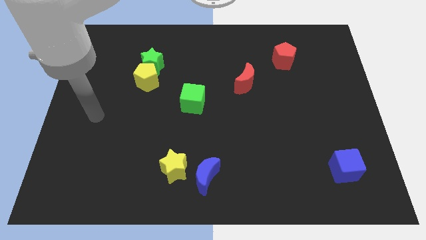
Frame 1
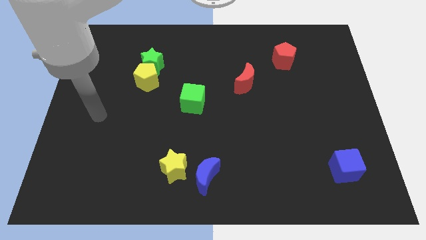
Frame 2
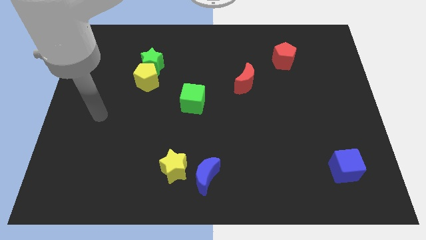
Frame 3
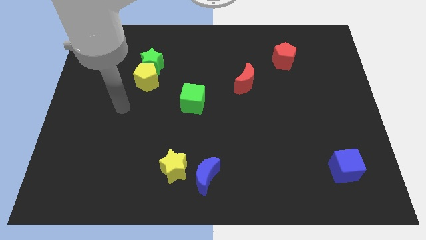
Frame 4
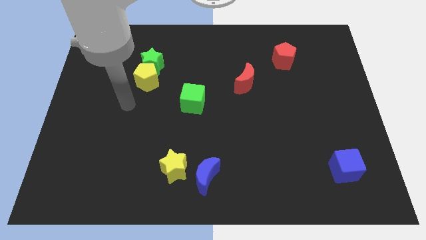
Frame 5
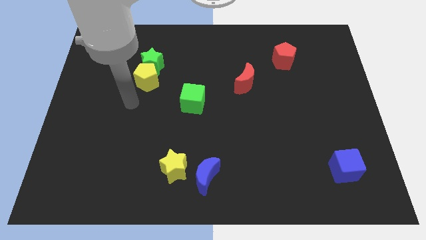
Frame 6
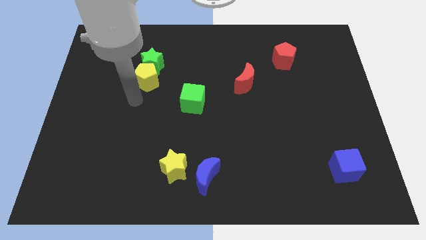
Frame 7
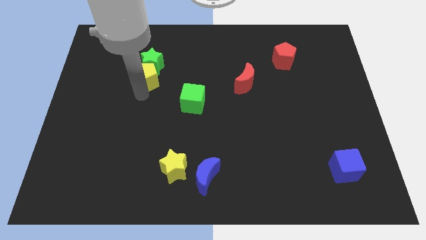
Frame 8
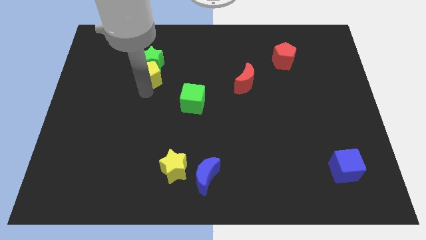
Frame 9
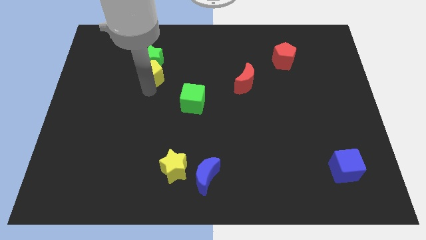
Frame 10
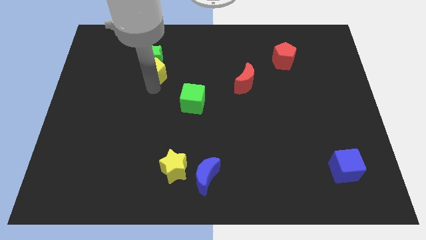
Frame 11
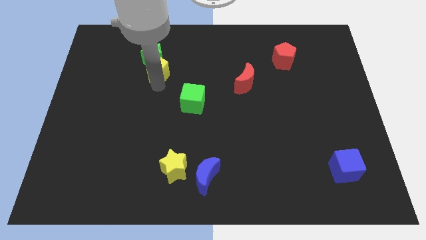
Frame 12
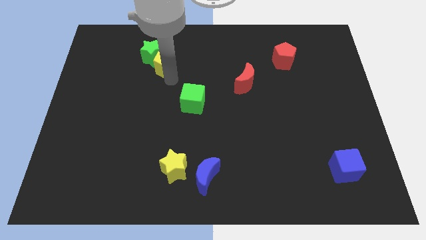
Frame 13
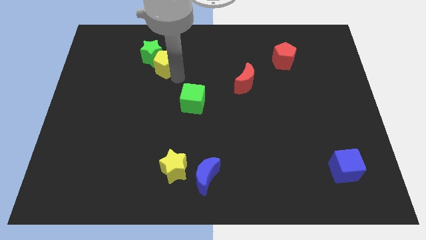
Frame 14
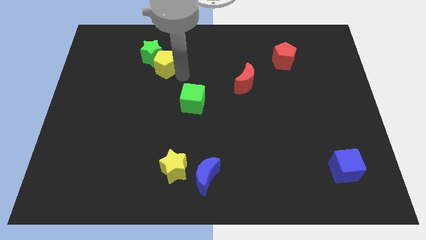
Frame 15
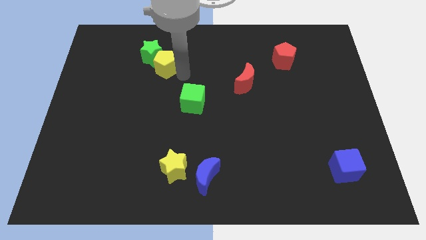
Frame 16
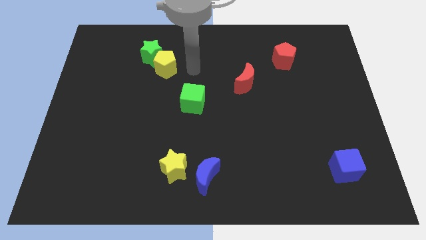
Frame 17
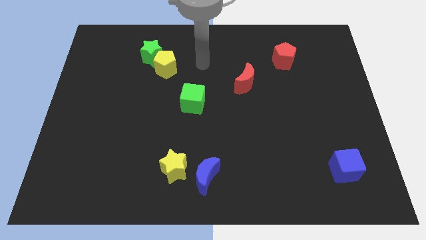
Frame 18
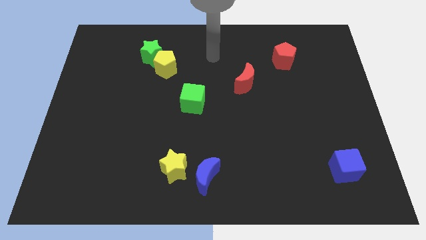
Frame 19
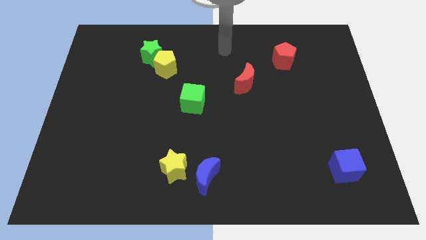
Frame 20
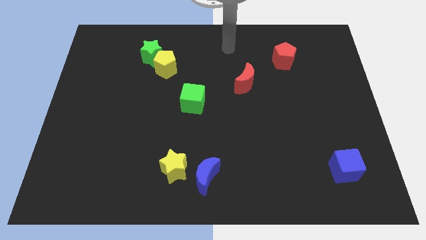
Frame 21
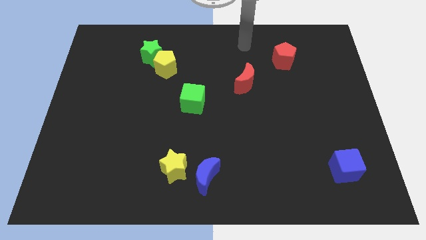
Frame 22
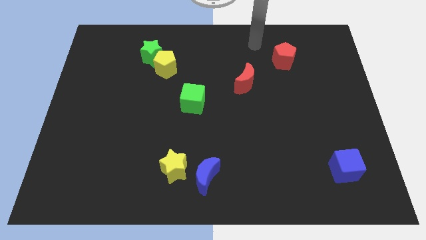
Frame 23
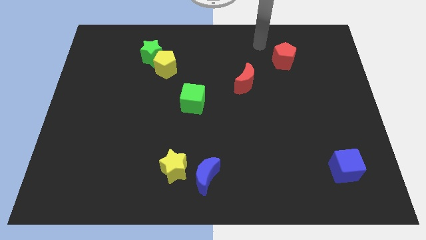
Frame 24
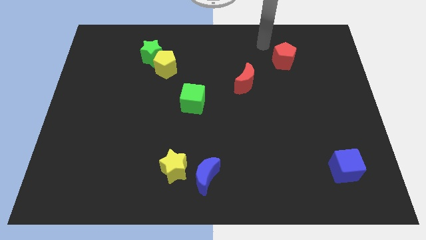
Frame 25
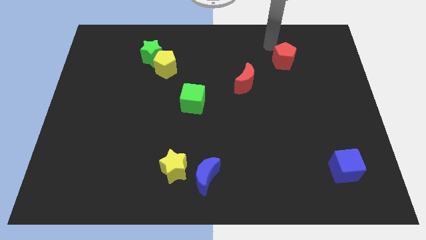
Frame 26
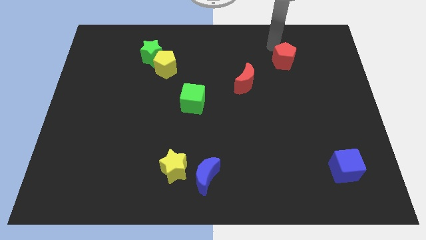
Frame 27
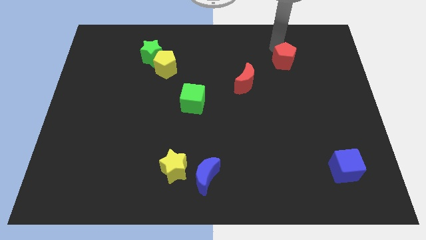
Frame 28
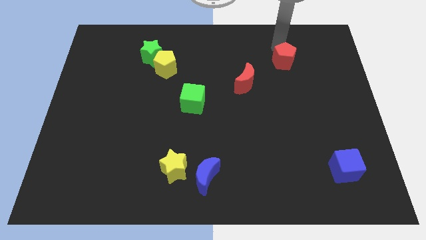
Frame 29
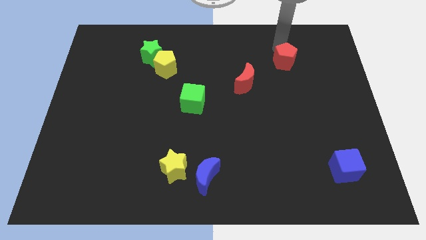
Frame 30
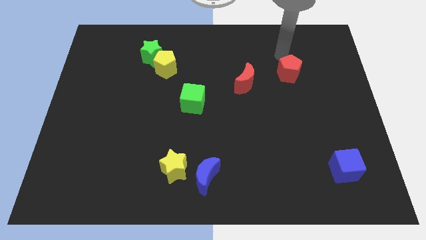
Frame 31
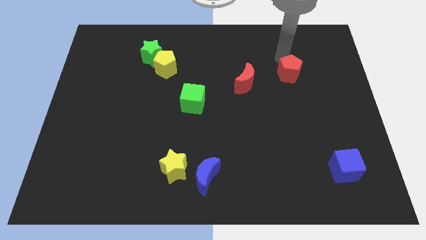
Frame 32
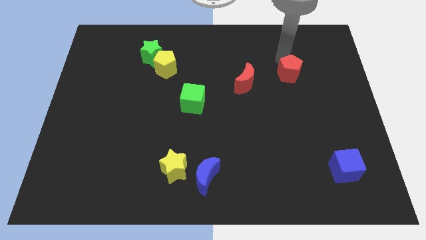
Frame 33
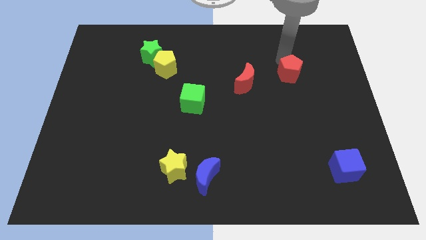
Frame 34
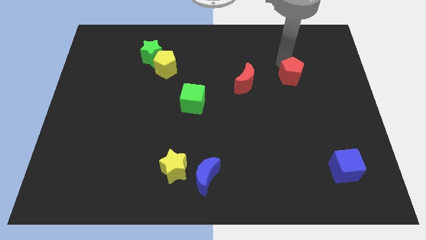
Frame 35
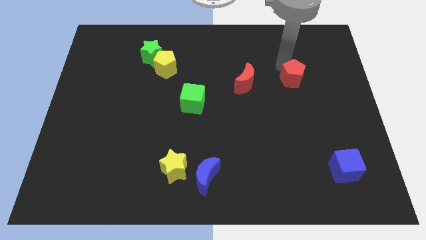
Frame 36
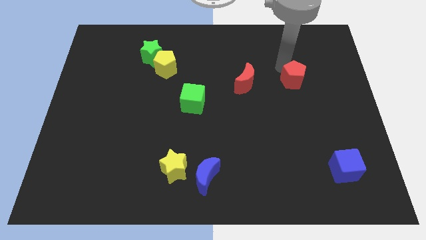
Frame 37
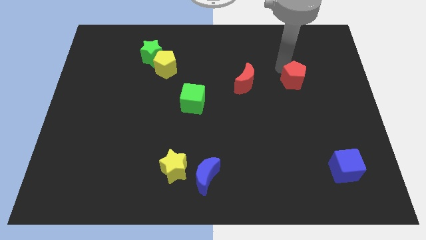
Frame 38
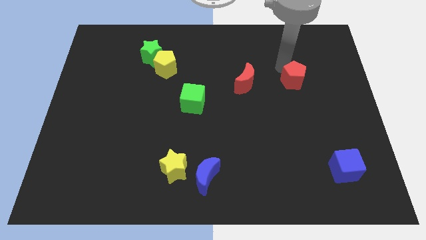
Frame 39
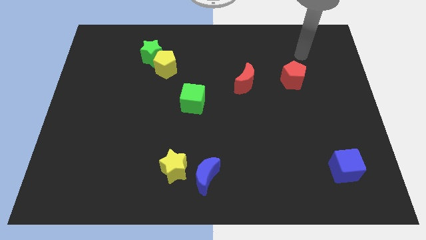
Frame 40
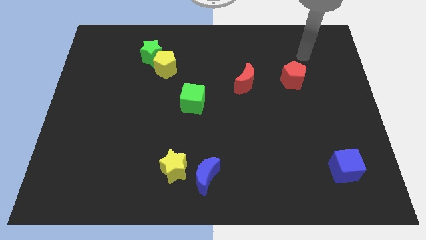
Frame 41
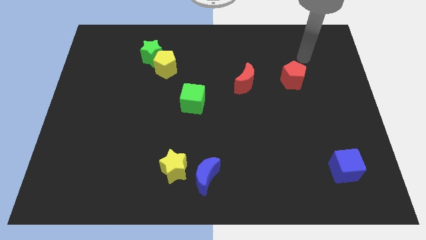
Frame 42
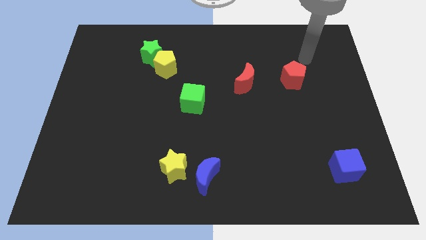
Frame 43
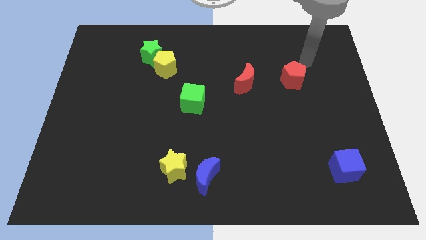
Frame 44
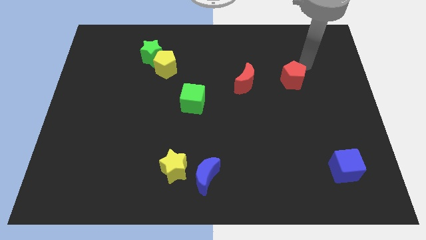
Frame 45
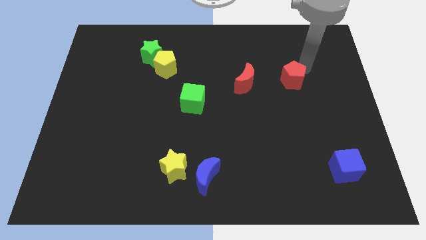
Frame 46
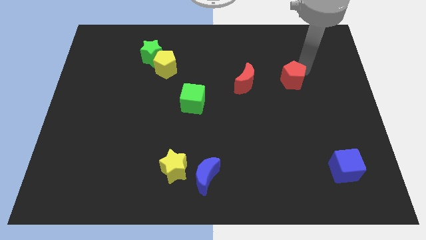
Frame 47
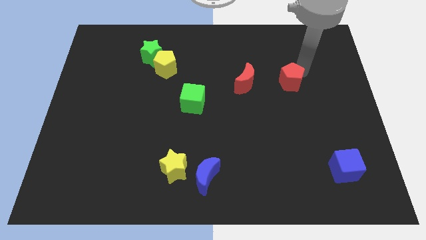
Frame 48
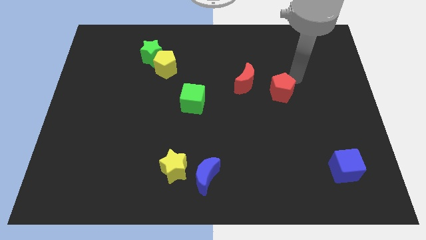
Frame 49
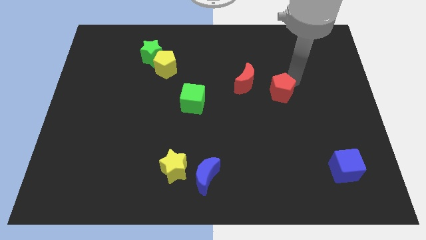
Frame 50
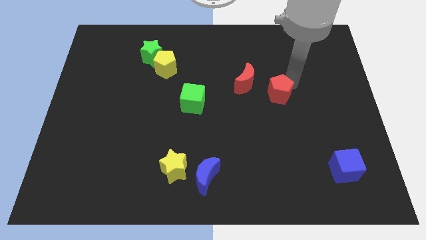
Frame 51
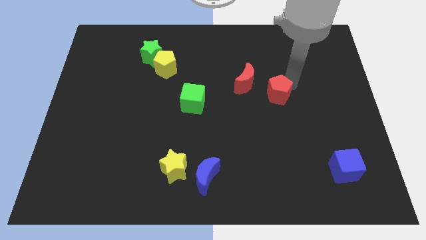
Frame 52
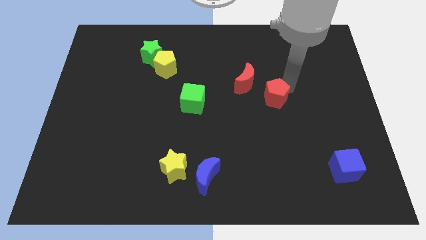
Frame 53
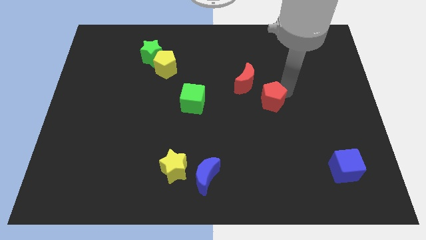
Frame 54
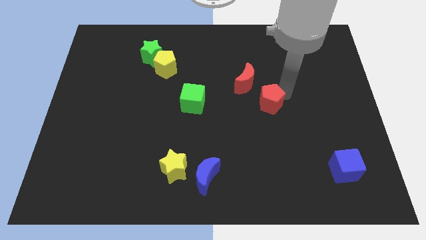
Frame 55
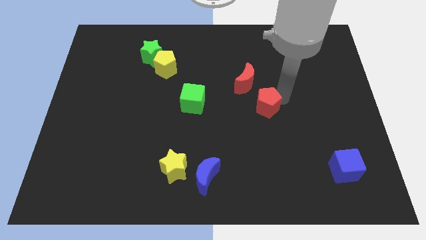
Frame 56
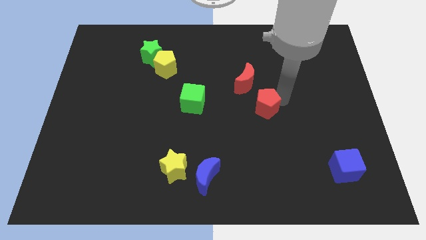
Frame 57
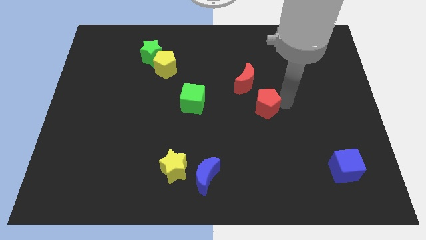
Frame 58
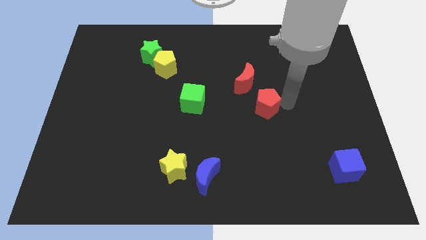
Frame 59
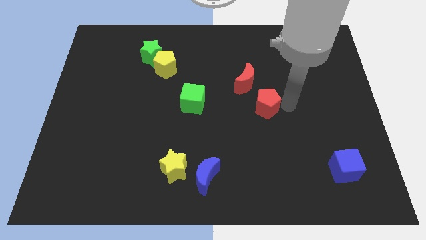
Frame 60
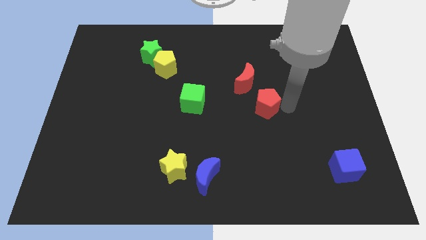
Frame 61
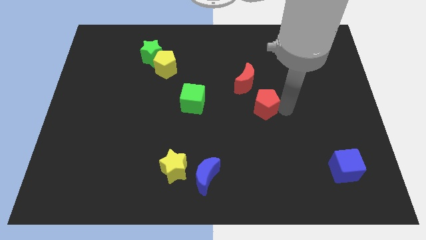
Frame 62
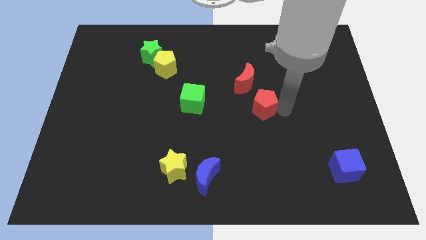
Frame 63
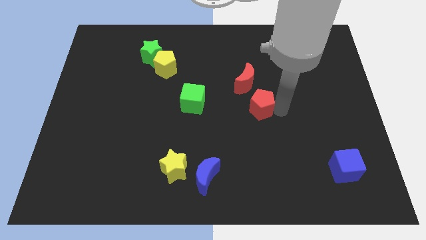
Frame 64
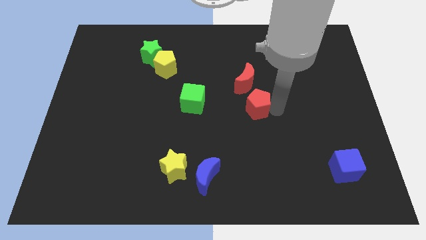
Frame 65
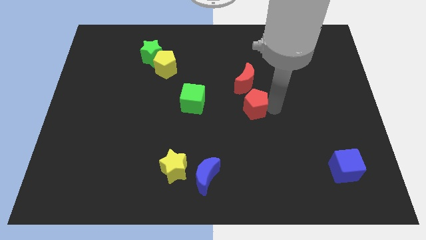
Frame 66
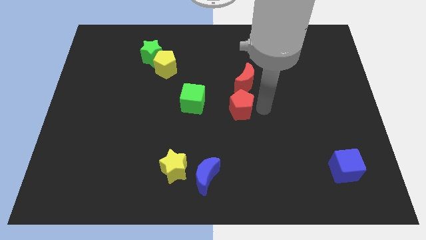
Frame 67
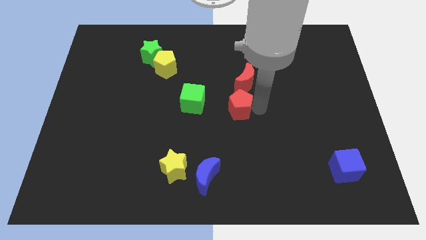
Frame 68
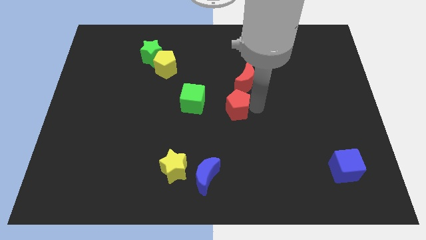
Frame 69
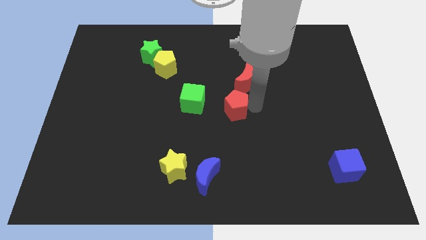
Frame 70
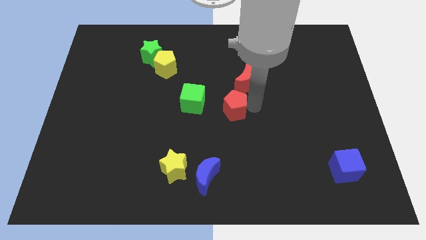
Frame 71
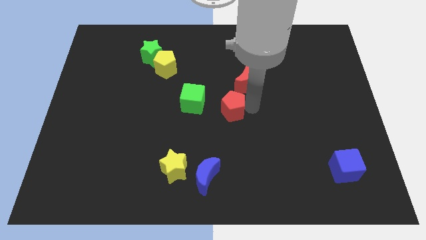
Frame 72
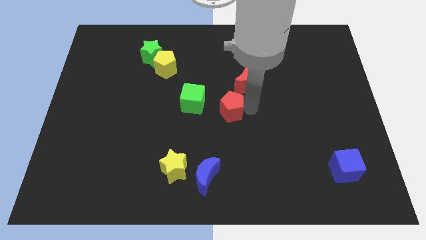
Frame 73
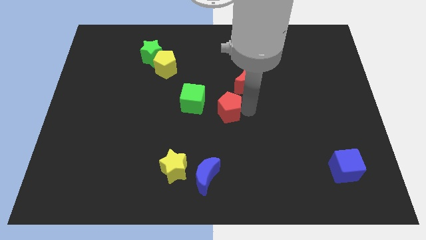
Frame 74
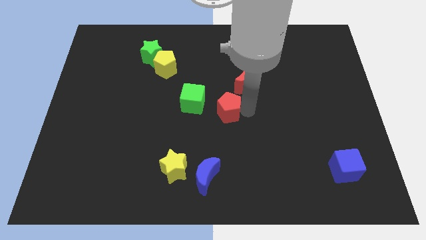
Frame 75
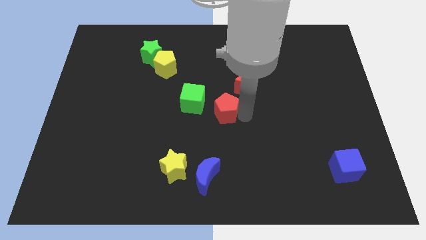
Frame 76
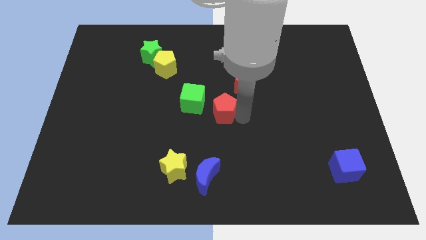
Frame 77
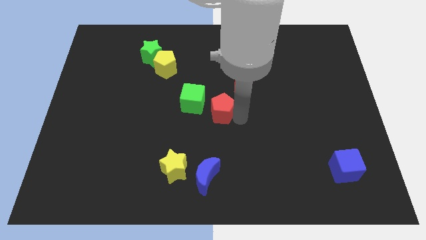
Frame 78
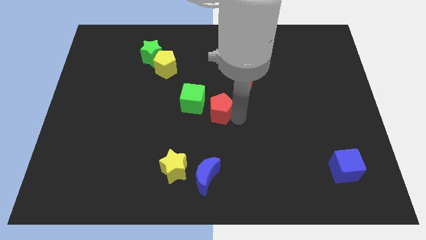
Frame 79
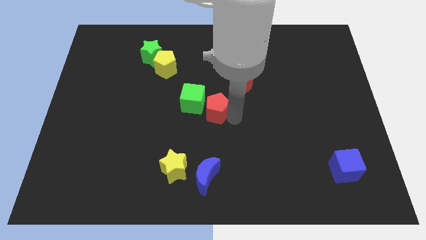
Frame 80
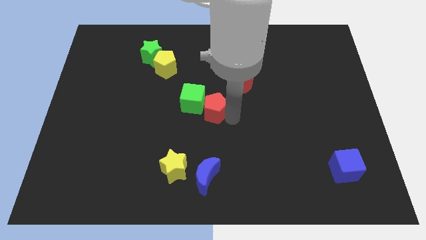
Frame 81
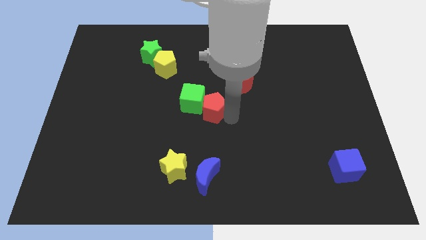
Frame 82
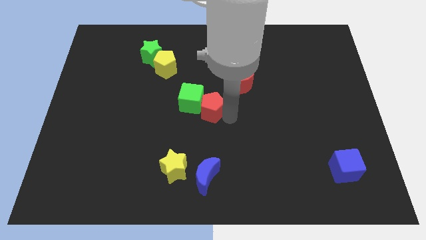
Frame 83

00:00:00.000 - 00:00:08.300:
put the red pentagon close to the green cube

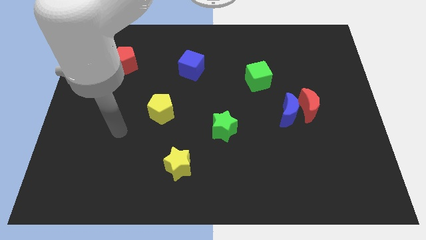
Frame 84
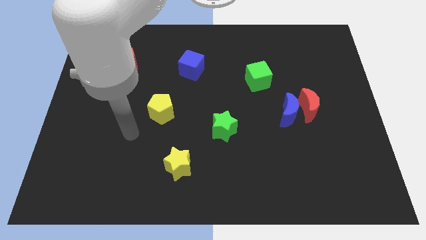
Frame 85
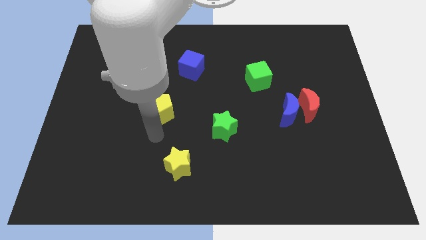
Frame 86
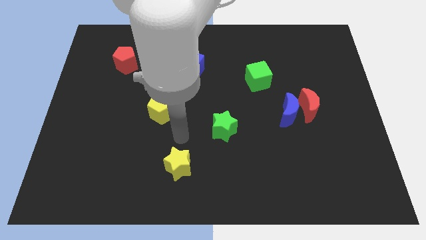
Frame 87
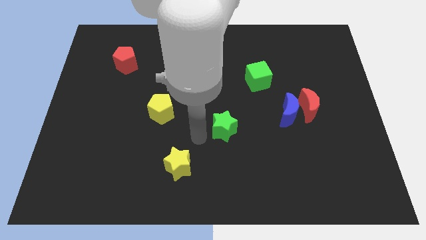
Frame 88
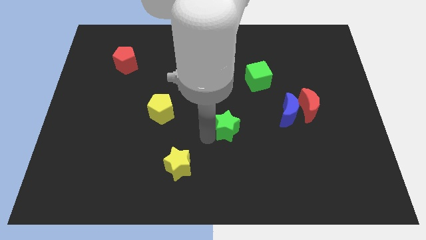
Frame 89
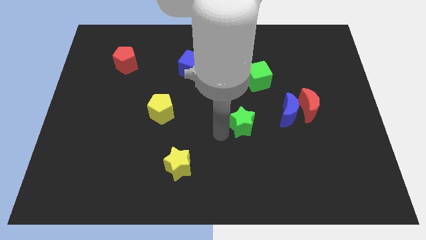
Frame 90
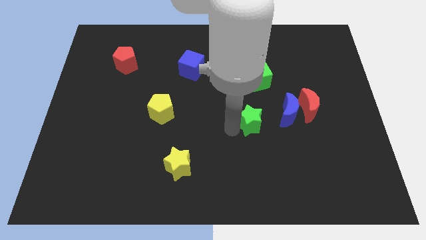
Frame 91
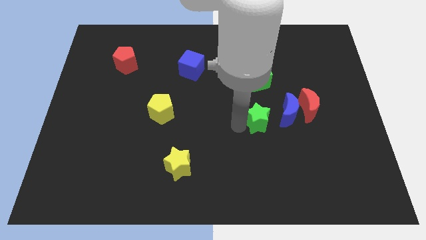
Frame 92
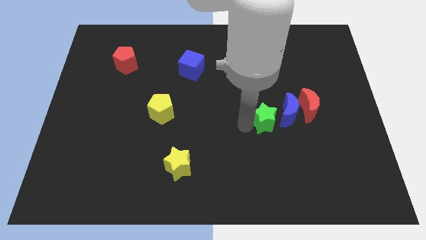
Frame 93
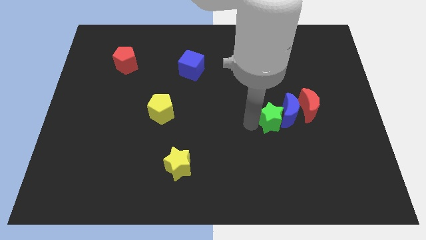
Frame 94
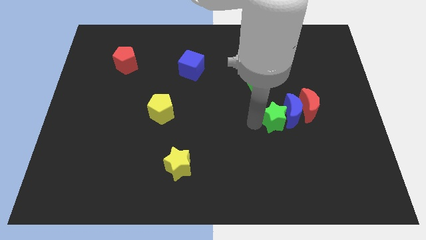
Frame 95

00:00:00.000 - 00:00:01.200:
move the green star close to the blue moon
